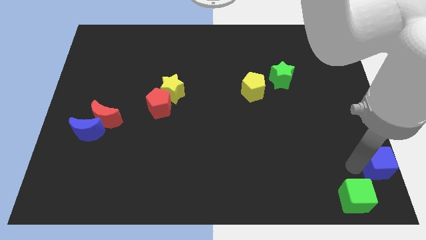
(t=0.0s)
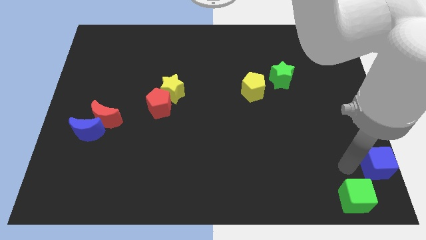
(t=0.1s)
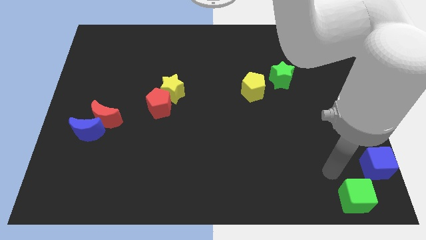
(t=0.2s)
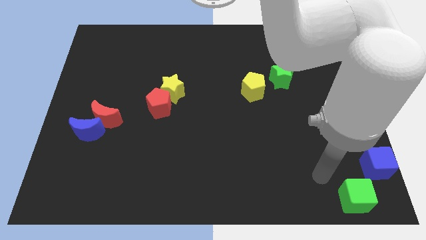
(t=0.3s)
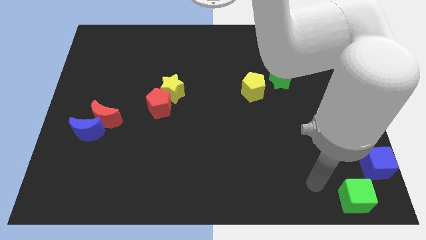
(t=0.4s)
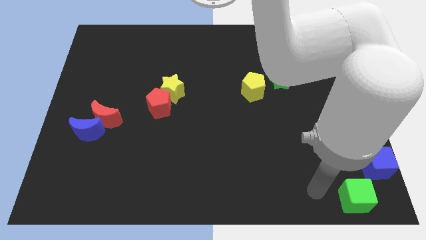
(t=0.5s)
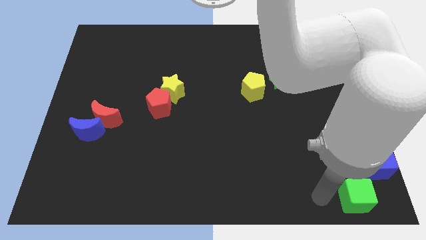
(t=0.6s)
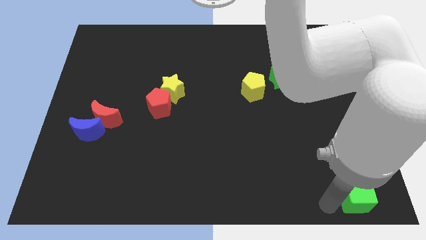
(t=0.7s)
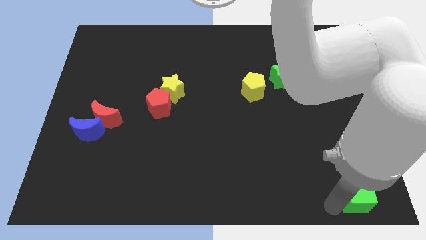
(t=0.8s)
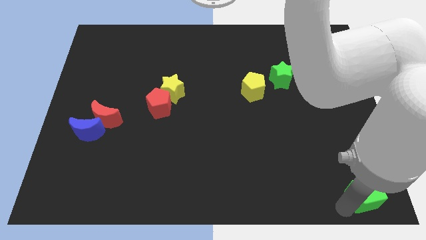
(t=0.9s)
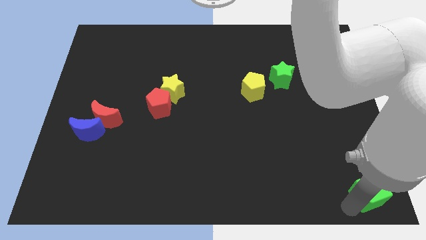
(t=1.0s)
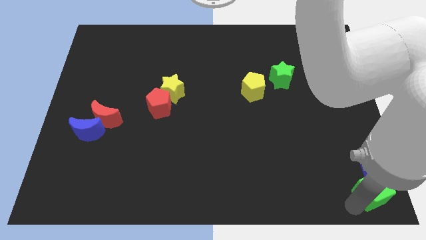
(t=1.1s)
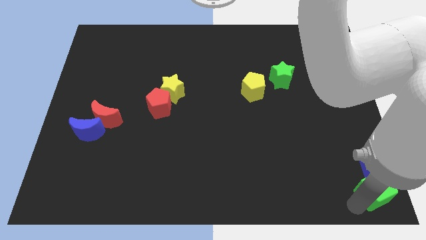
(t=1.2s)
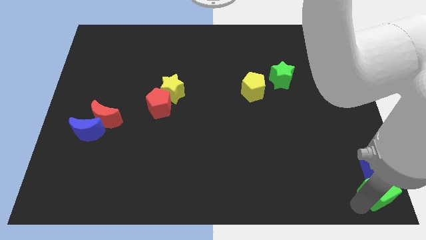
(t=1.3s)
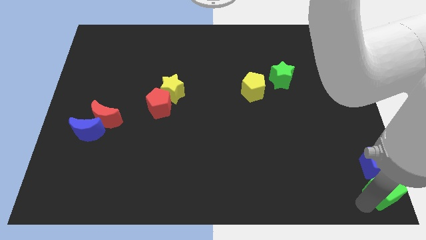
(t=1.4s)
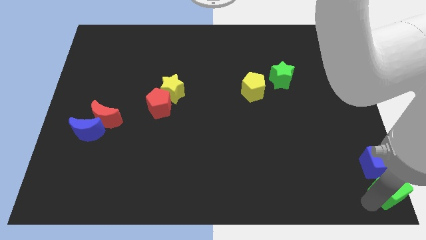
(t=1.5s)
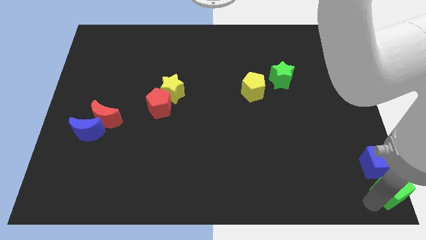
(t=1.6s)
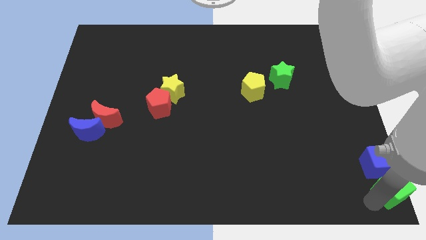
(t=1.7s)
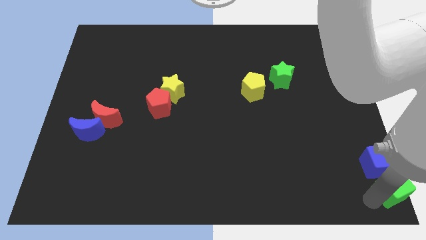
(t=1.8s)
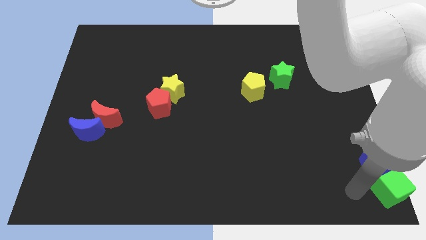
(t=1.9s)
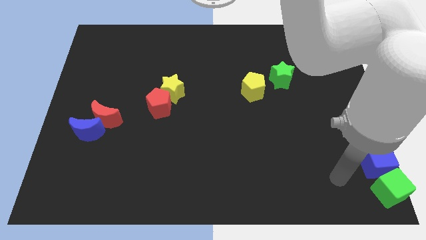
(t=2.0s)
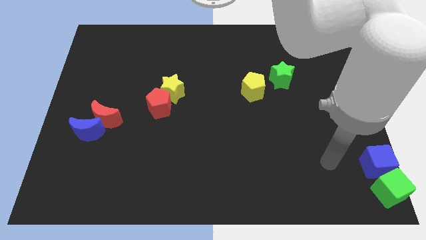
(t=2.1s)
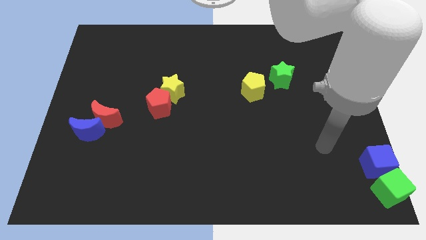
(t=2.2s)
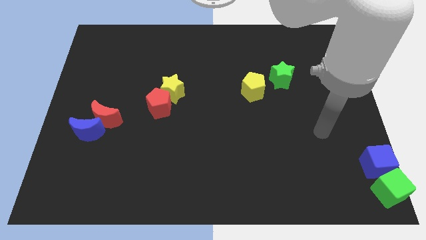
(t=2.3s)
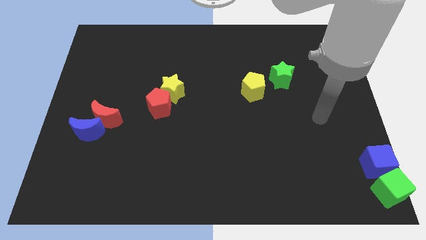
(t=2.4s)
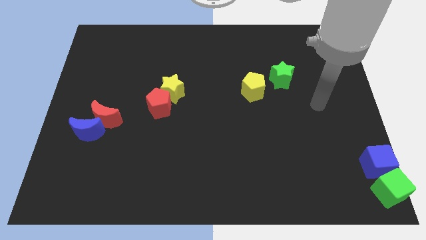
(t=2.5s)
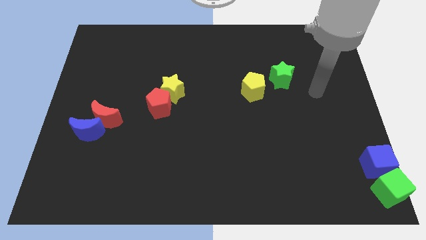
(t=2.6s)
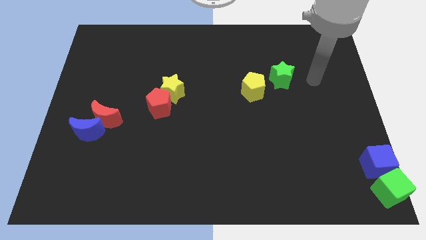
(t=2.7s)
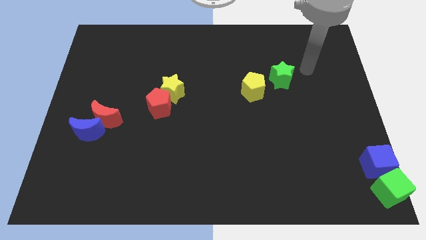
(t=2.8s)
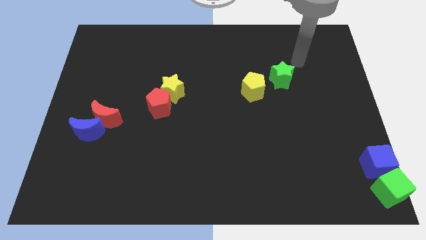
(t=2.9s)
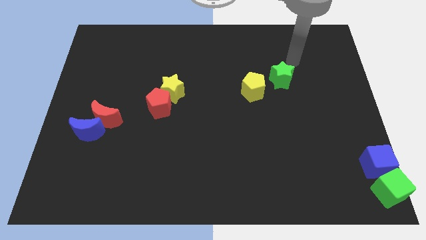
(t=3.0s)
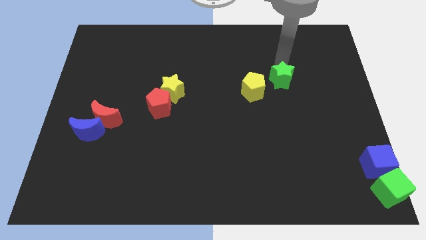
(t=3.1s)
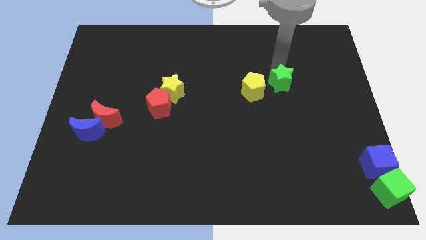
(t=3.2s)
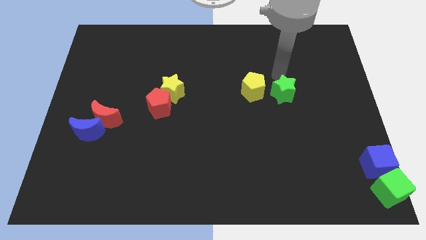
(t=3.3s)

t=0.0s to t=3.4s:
move the green cube to the bottom of the blue cube

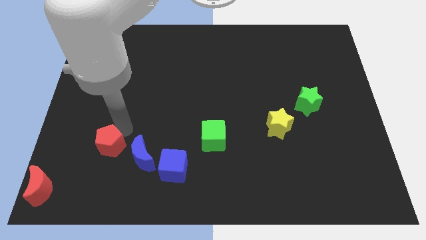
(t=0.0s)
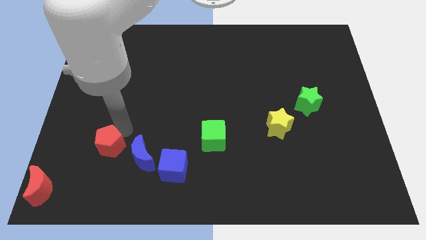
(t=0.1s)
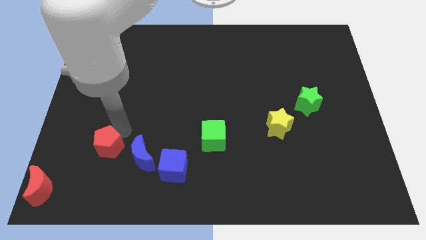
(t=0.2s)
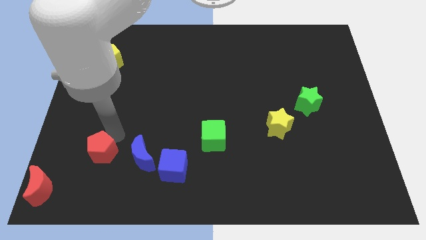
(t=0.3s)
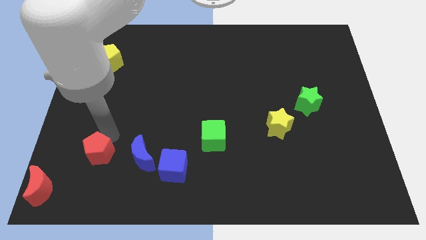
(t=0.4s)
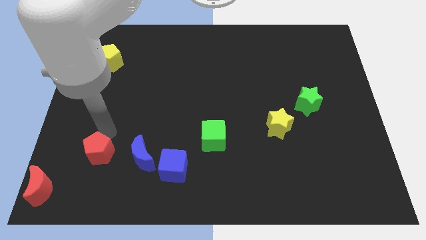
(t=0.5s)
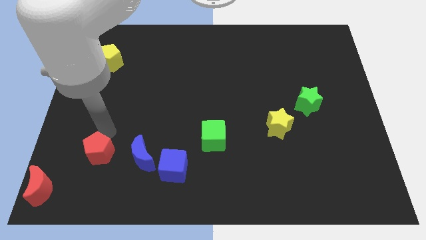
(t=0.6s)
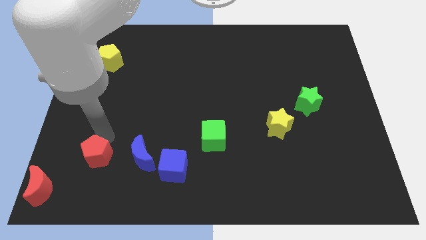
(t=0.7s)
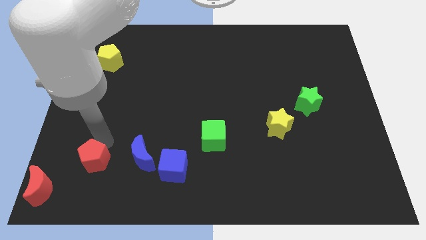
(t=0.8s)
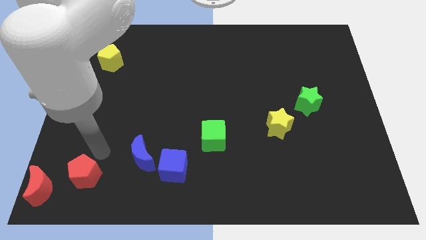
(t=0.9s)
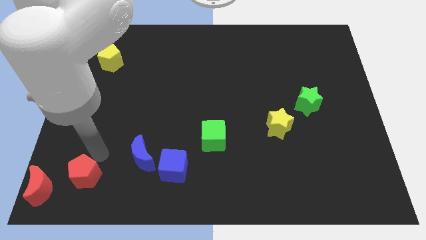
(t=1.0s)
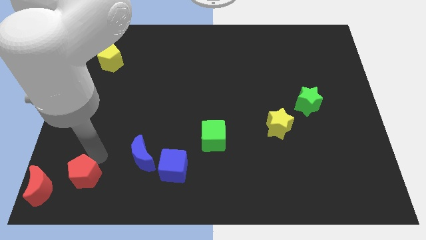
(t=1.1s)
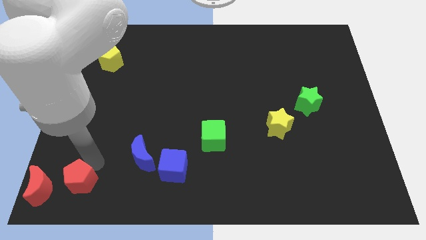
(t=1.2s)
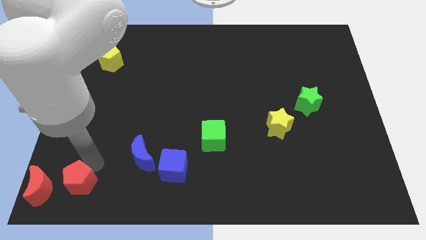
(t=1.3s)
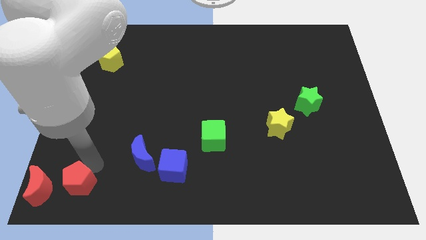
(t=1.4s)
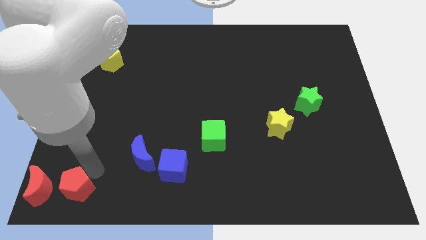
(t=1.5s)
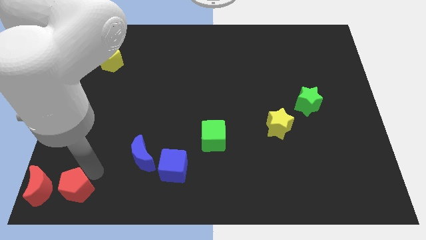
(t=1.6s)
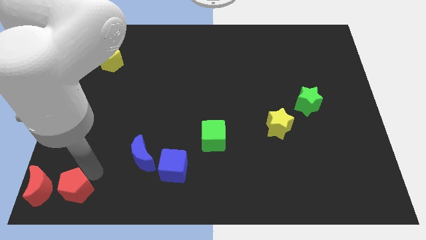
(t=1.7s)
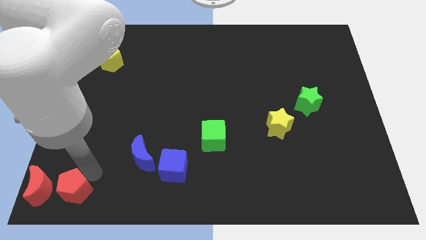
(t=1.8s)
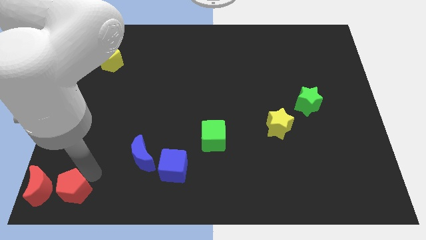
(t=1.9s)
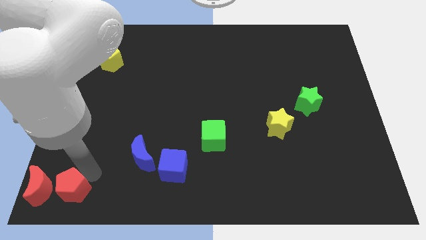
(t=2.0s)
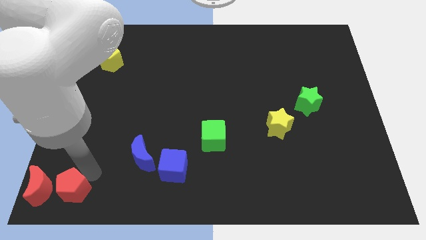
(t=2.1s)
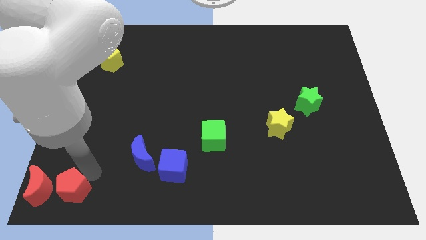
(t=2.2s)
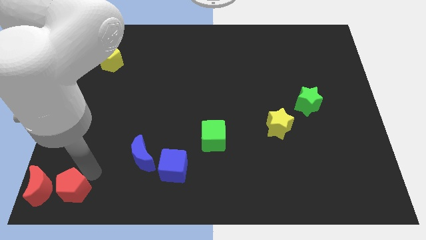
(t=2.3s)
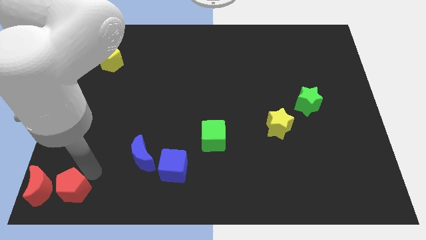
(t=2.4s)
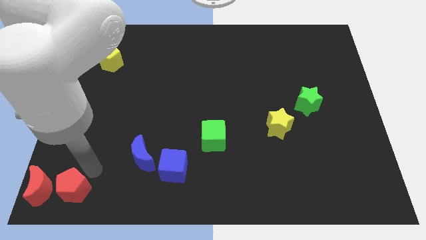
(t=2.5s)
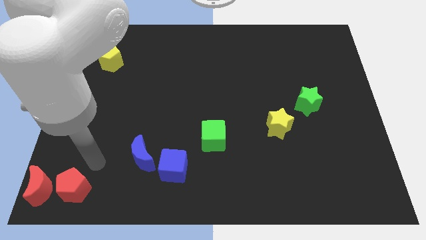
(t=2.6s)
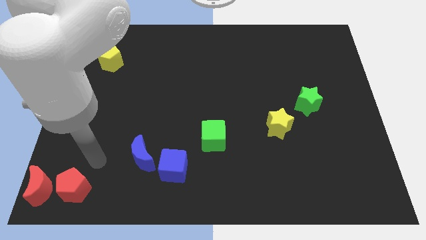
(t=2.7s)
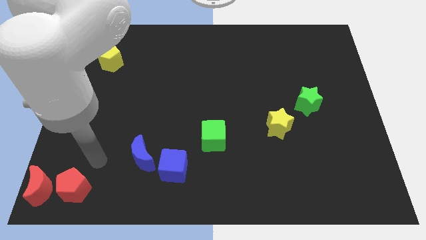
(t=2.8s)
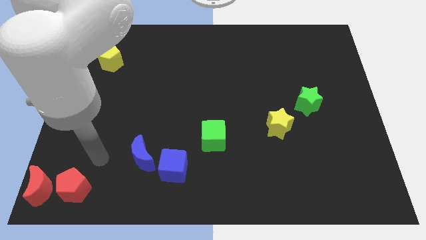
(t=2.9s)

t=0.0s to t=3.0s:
place the red pentagon beside the red crescent

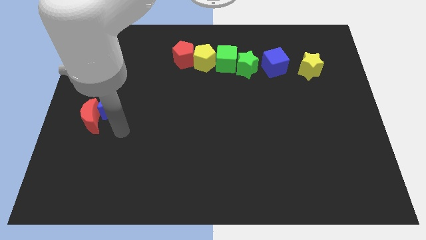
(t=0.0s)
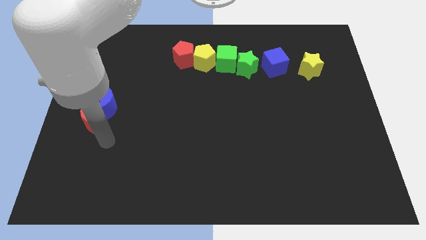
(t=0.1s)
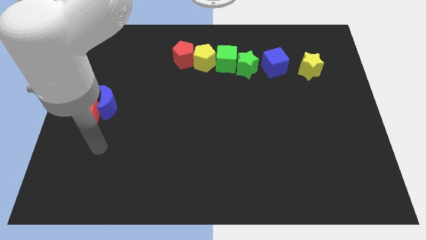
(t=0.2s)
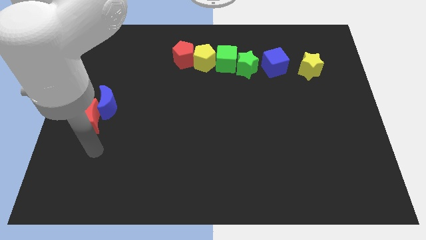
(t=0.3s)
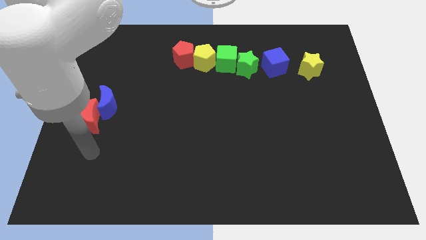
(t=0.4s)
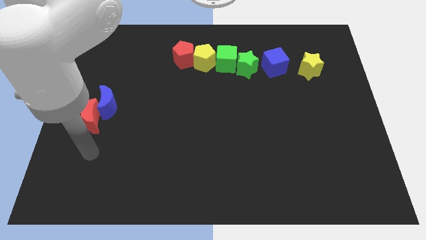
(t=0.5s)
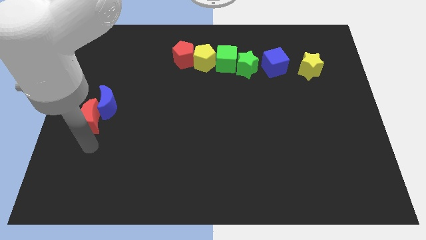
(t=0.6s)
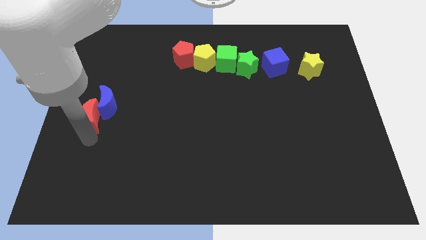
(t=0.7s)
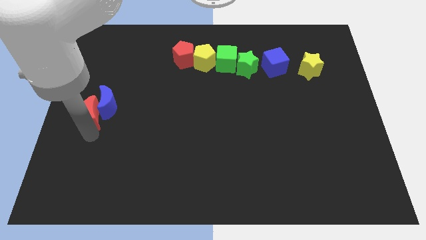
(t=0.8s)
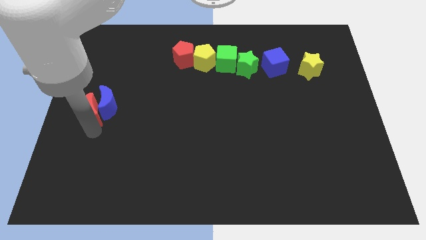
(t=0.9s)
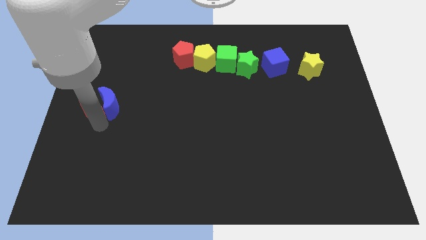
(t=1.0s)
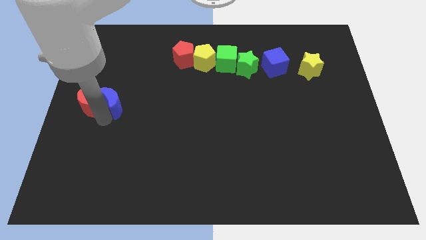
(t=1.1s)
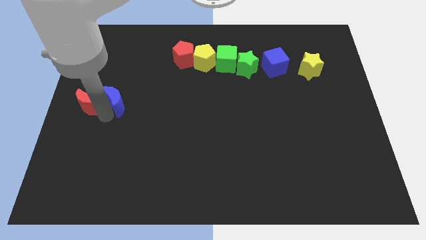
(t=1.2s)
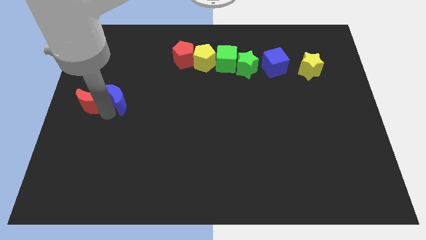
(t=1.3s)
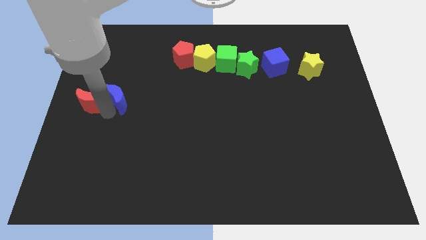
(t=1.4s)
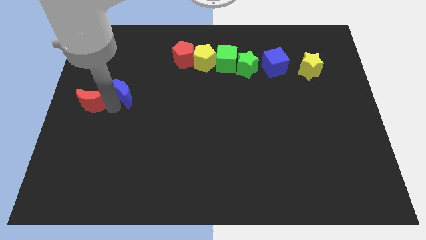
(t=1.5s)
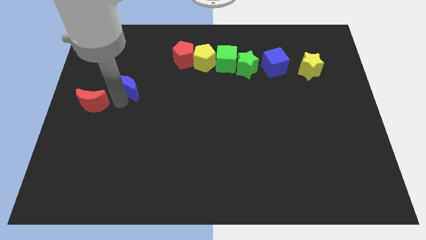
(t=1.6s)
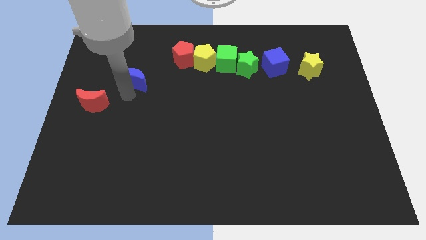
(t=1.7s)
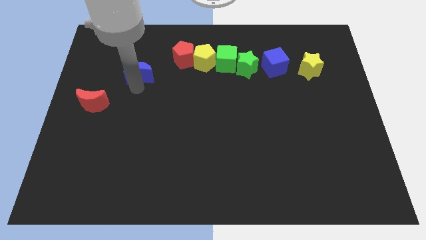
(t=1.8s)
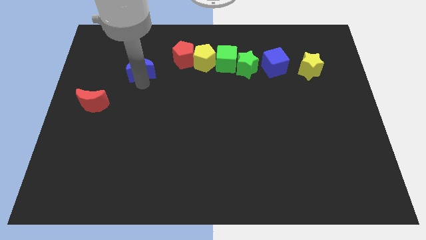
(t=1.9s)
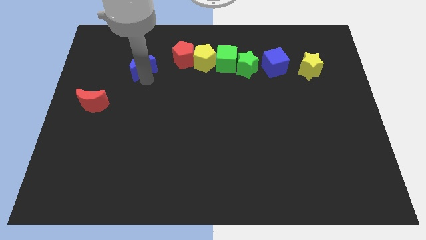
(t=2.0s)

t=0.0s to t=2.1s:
separate red moon and the blue moon

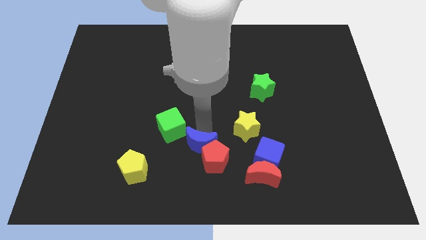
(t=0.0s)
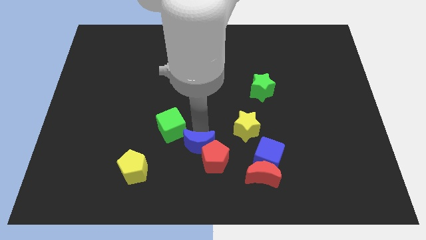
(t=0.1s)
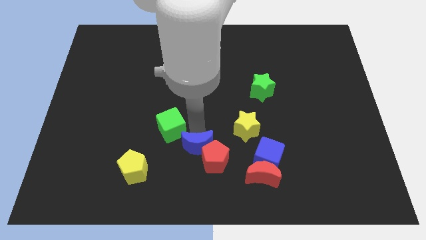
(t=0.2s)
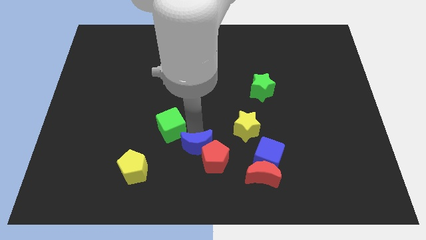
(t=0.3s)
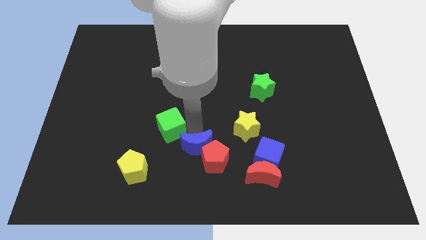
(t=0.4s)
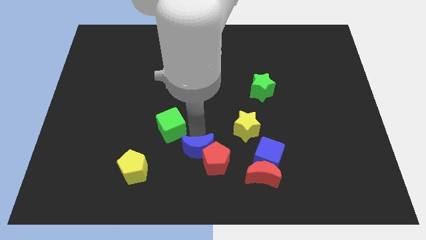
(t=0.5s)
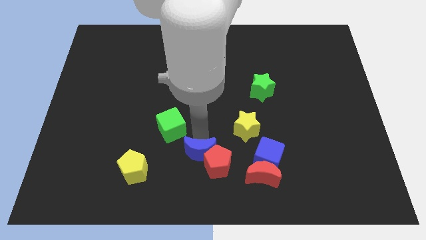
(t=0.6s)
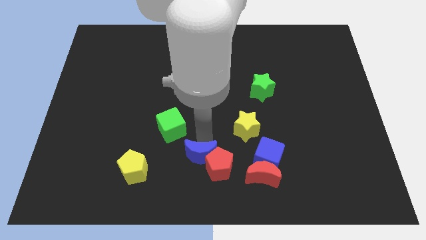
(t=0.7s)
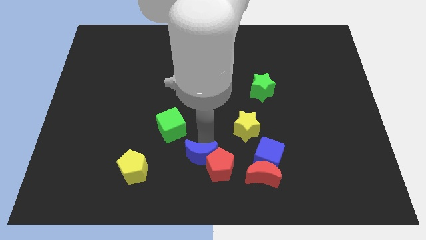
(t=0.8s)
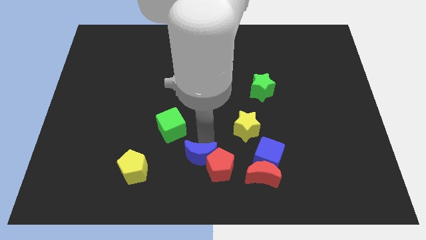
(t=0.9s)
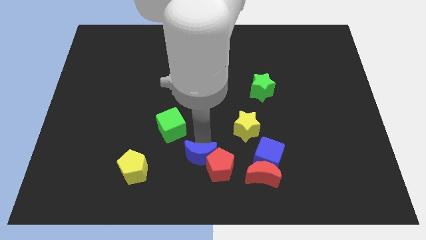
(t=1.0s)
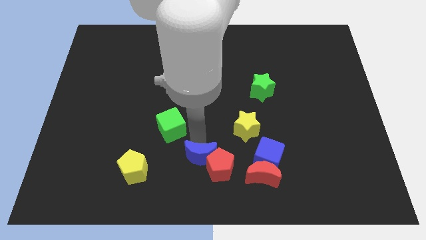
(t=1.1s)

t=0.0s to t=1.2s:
separate blue crescent form green cube
